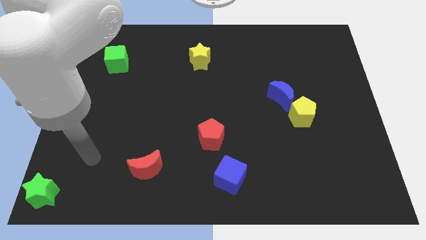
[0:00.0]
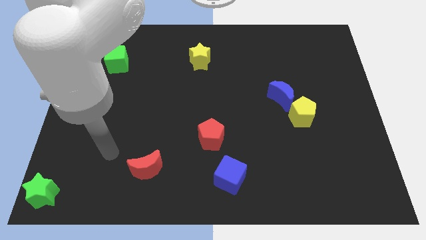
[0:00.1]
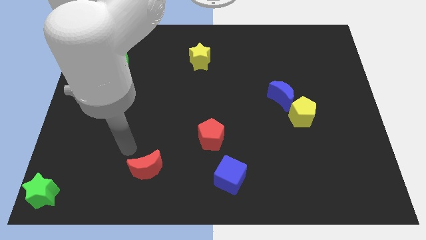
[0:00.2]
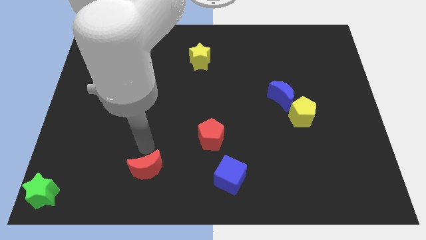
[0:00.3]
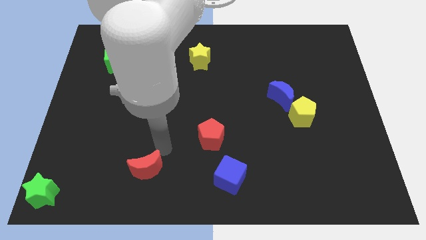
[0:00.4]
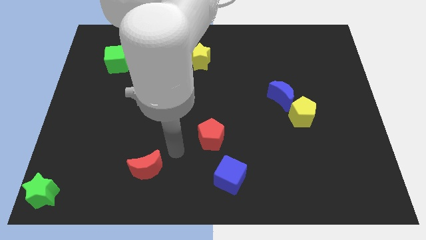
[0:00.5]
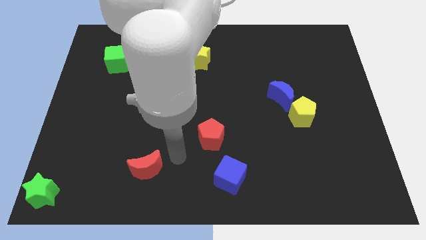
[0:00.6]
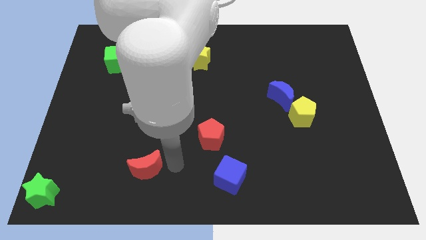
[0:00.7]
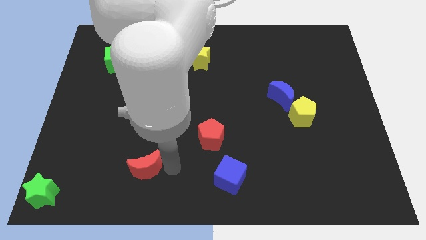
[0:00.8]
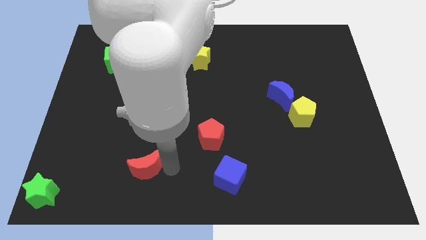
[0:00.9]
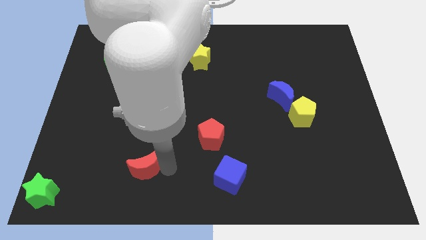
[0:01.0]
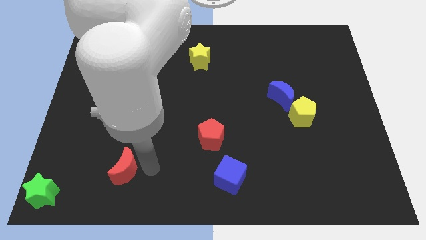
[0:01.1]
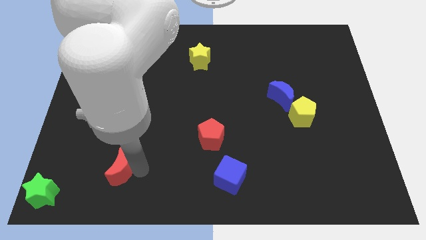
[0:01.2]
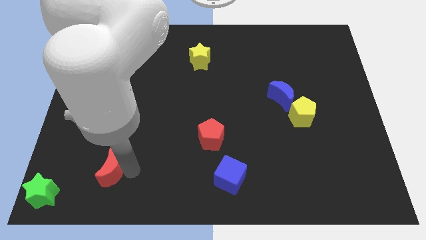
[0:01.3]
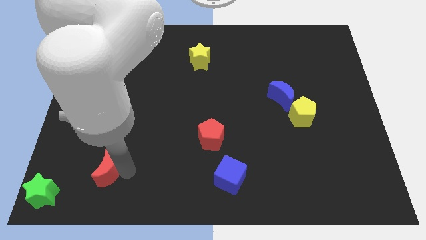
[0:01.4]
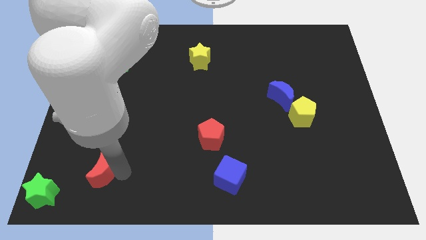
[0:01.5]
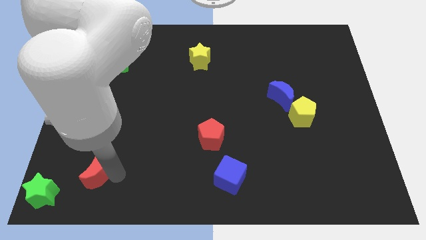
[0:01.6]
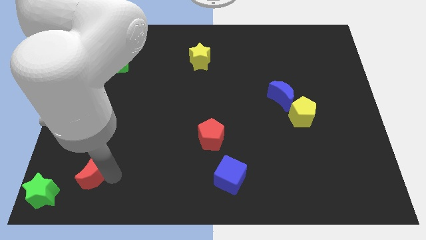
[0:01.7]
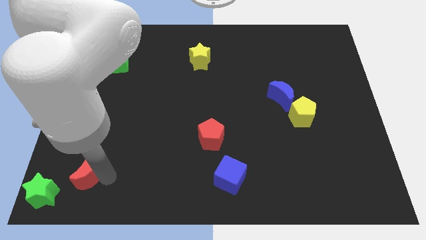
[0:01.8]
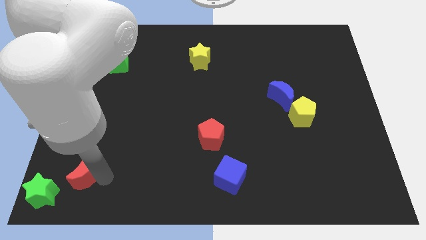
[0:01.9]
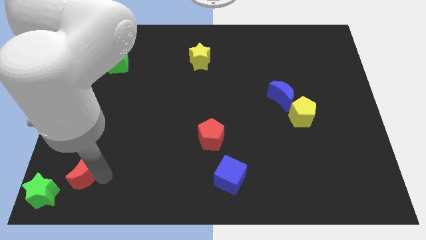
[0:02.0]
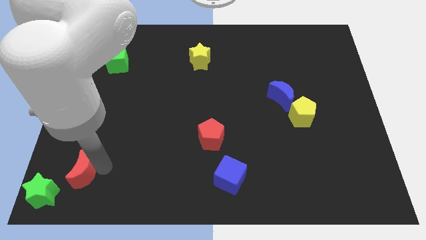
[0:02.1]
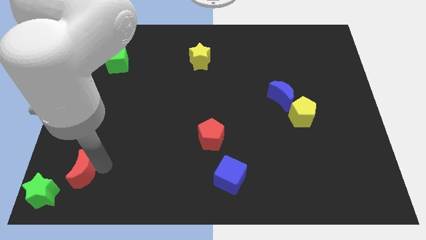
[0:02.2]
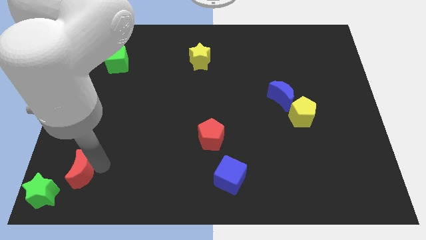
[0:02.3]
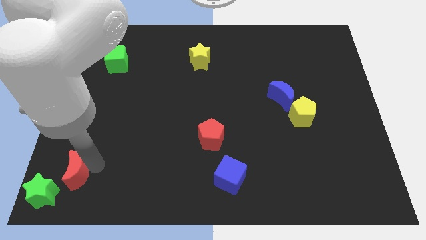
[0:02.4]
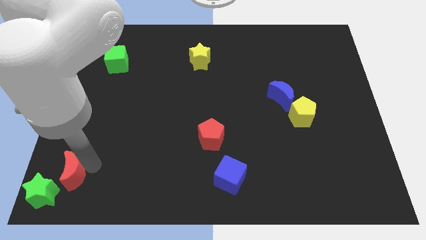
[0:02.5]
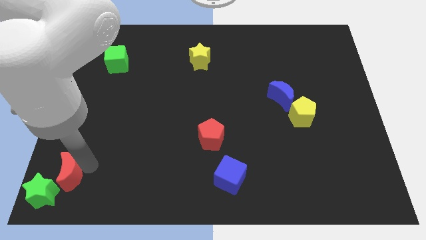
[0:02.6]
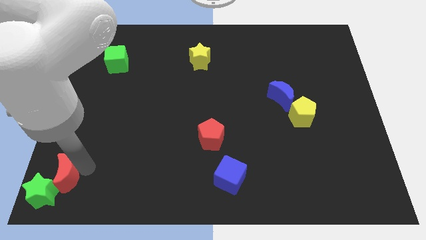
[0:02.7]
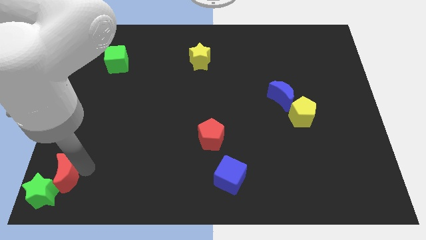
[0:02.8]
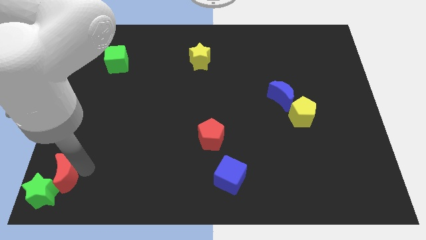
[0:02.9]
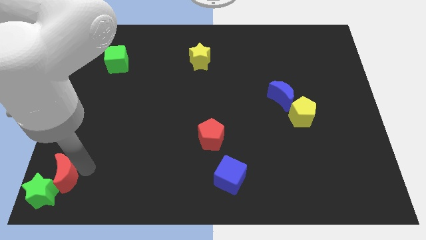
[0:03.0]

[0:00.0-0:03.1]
place red crescent beside green star

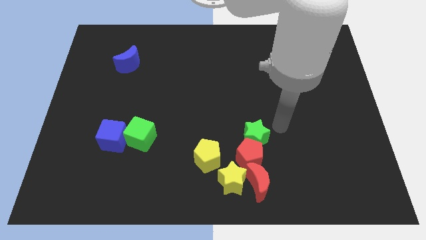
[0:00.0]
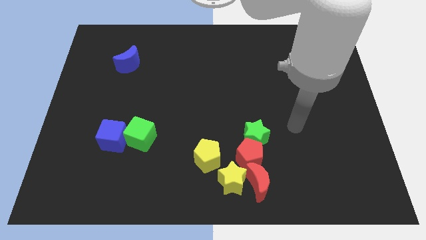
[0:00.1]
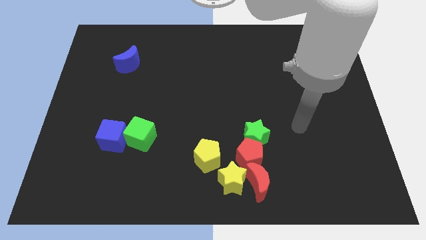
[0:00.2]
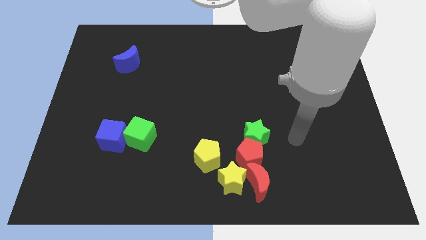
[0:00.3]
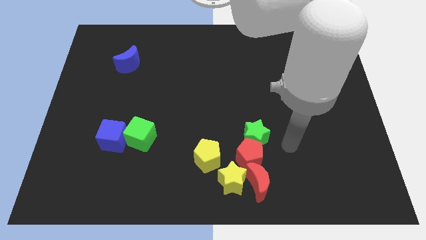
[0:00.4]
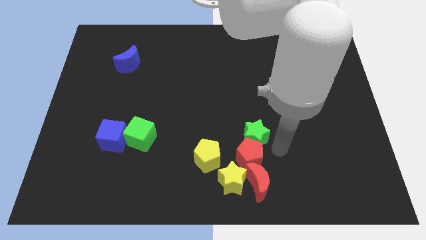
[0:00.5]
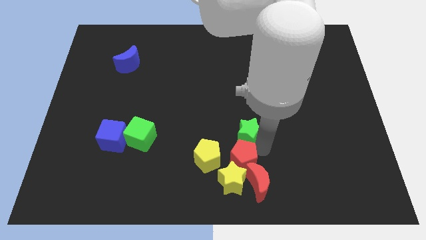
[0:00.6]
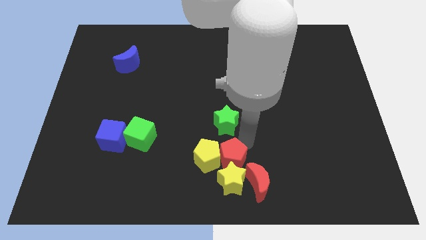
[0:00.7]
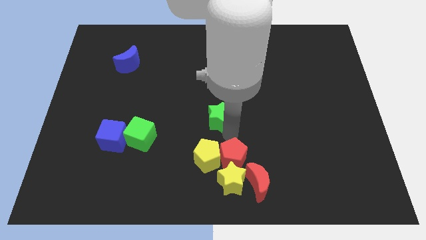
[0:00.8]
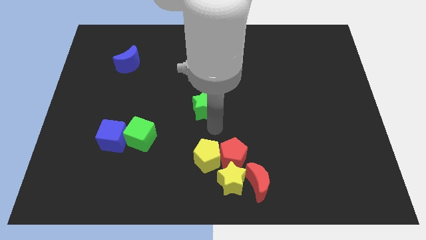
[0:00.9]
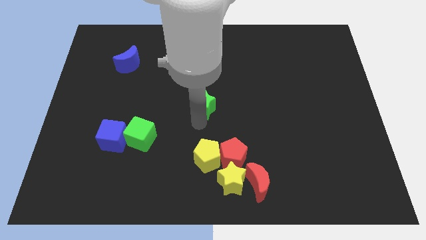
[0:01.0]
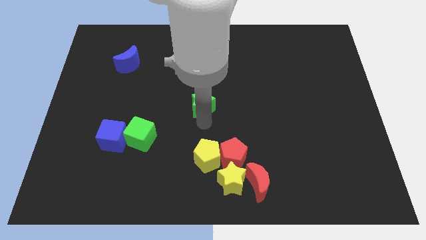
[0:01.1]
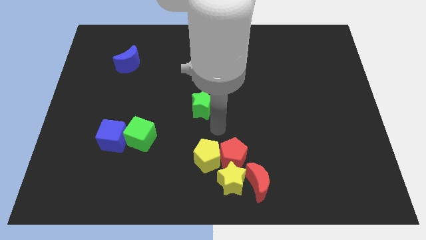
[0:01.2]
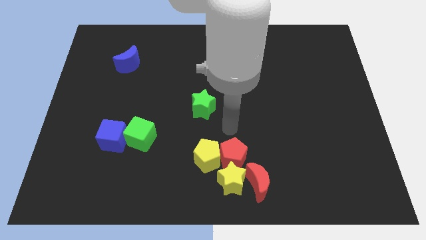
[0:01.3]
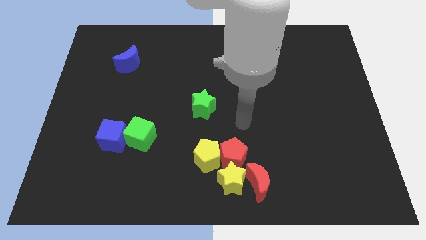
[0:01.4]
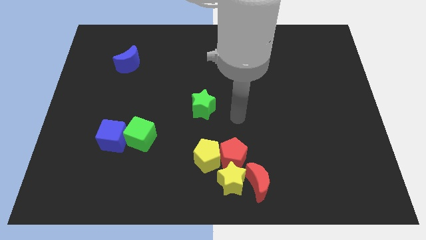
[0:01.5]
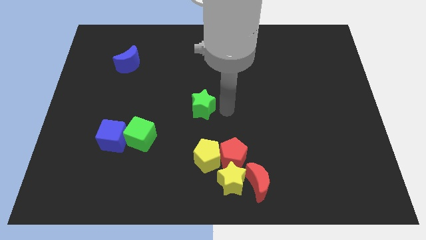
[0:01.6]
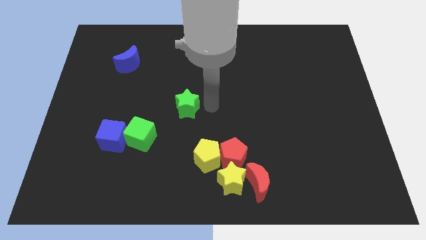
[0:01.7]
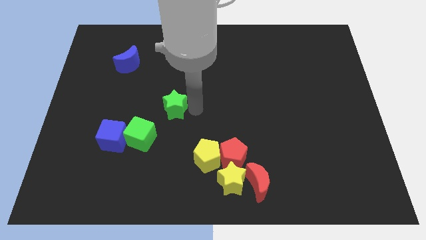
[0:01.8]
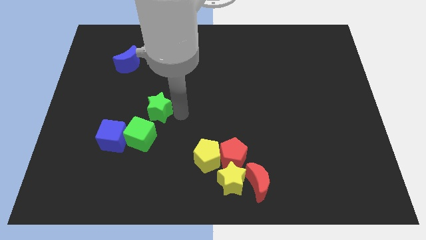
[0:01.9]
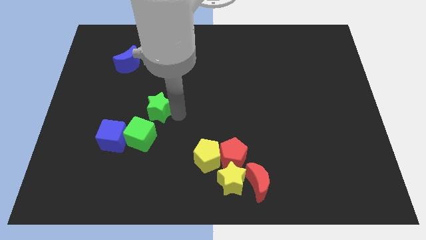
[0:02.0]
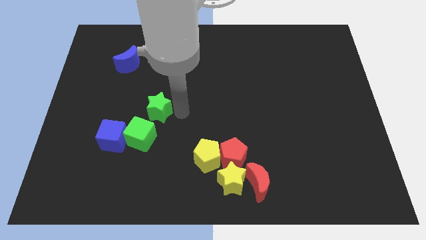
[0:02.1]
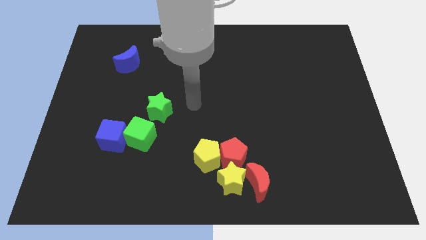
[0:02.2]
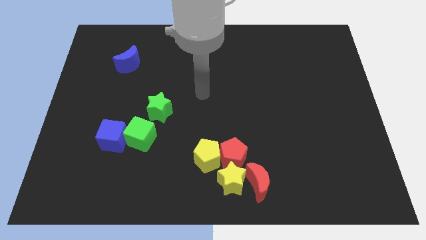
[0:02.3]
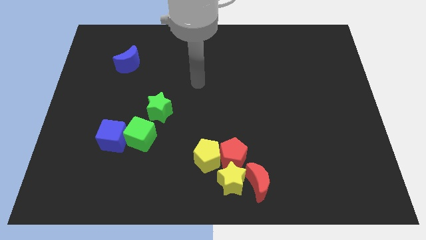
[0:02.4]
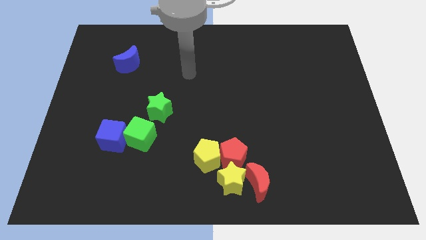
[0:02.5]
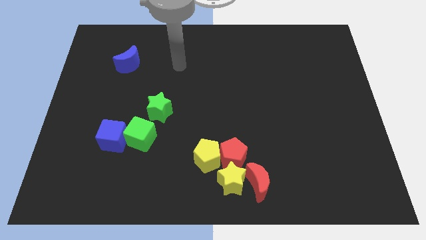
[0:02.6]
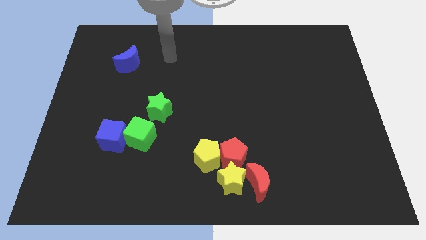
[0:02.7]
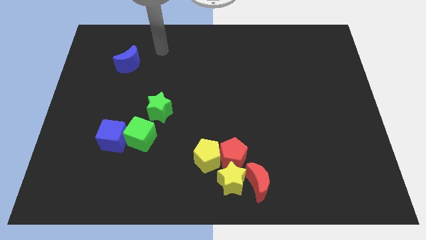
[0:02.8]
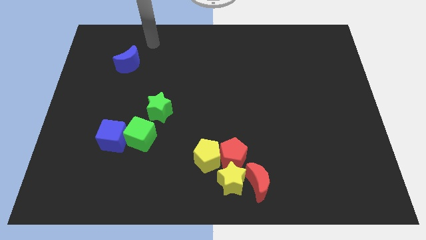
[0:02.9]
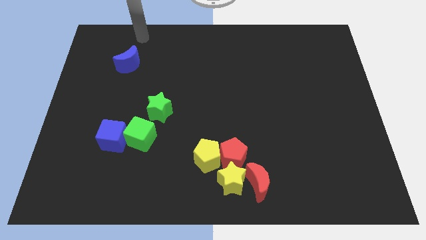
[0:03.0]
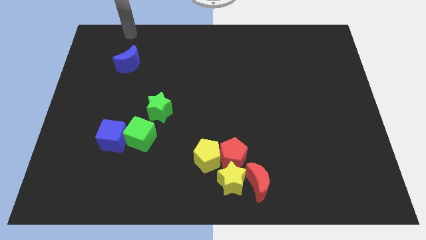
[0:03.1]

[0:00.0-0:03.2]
place green star to the top of green cube

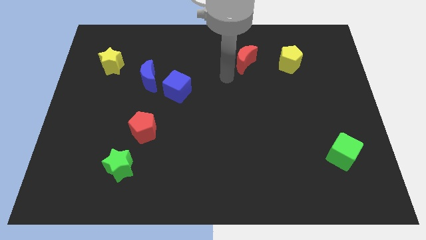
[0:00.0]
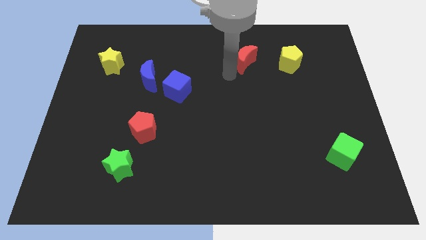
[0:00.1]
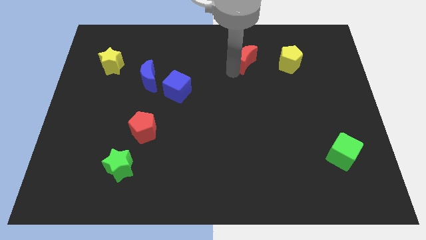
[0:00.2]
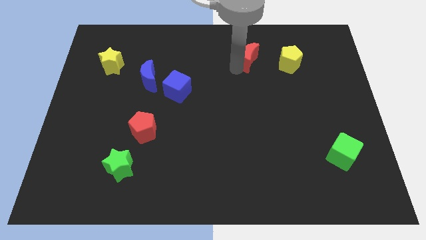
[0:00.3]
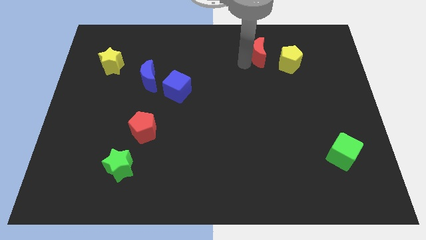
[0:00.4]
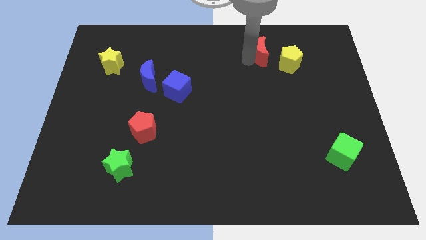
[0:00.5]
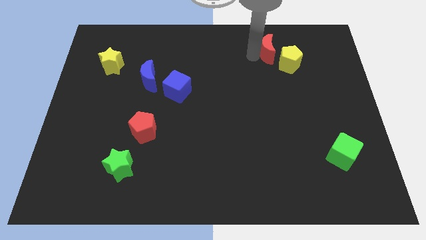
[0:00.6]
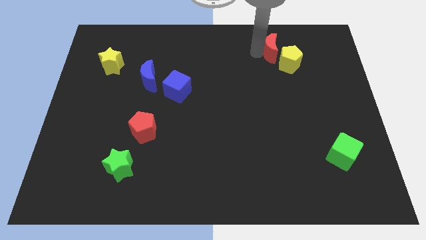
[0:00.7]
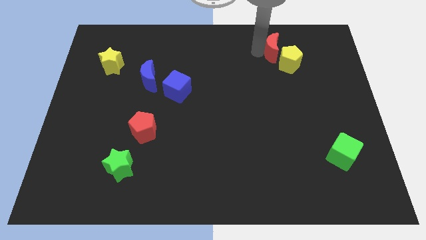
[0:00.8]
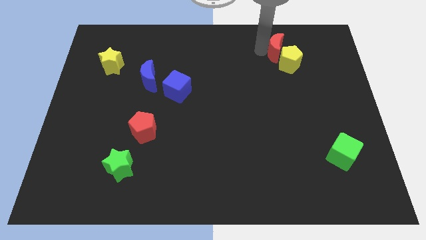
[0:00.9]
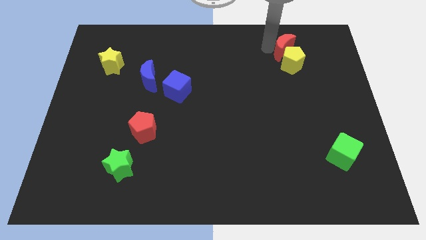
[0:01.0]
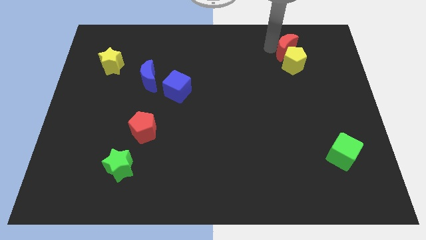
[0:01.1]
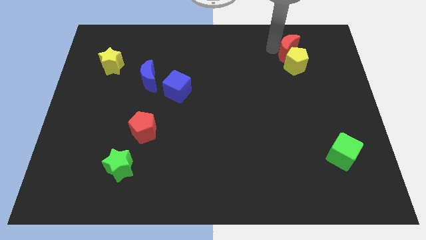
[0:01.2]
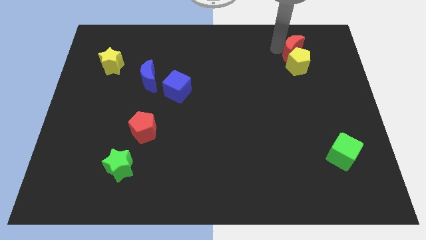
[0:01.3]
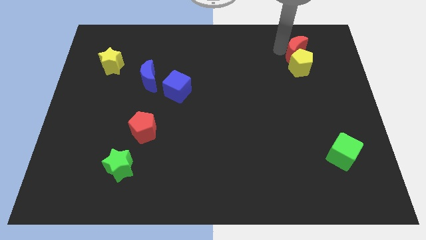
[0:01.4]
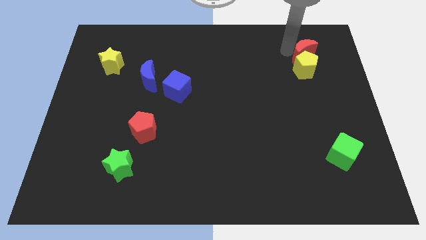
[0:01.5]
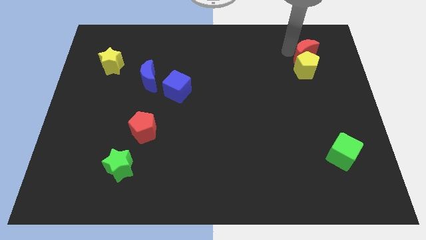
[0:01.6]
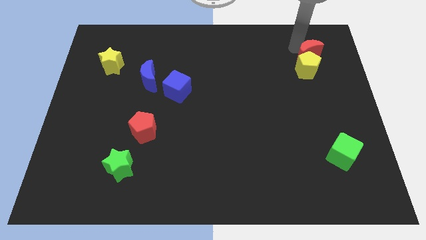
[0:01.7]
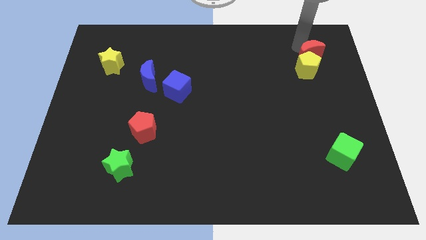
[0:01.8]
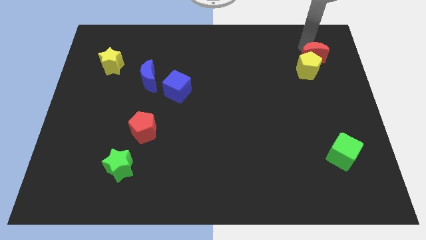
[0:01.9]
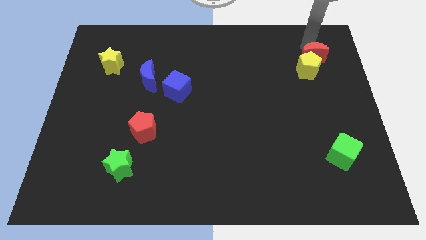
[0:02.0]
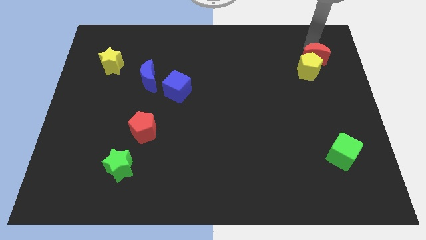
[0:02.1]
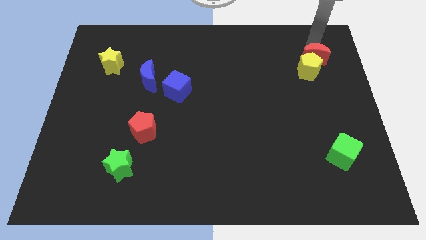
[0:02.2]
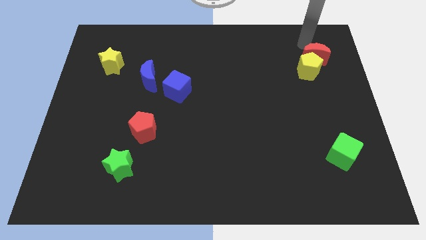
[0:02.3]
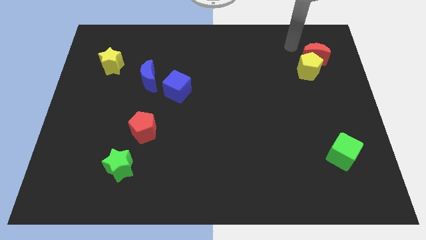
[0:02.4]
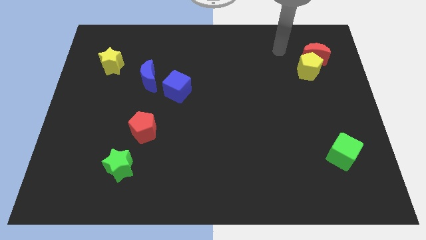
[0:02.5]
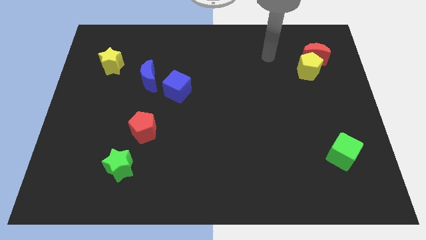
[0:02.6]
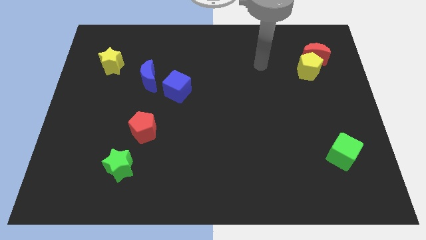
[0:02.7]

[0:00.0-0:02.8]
push the red moon into the yellow pentagon

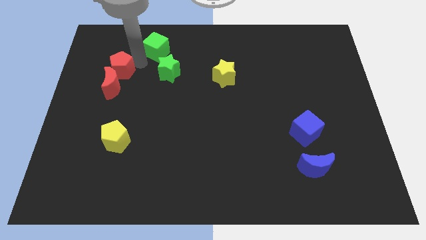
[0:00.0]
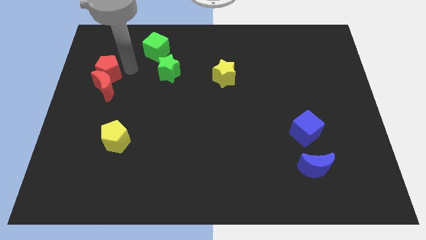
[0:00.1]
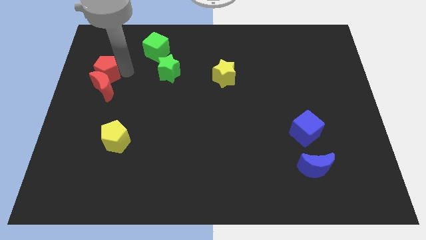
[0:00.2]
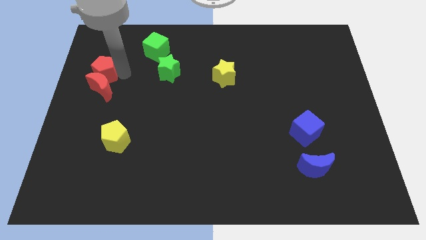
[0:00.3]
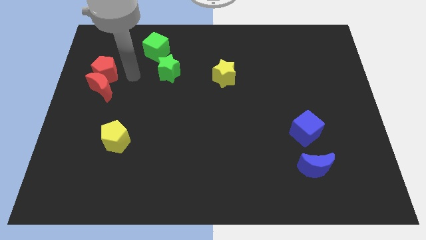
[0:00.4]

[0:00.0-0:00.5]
move the red pentagon into the red moon
